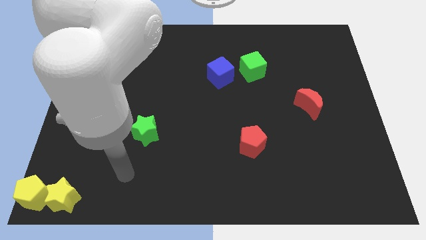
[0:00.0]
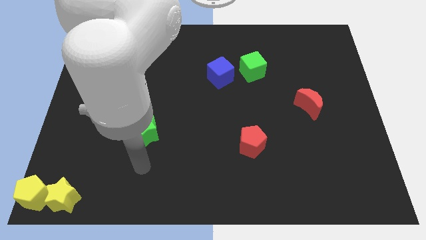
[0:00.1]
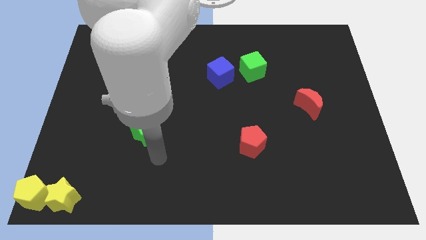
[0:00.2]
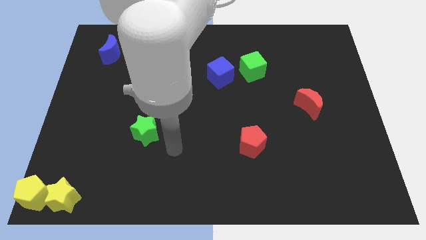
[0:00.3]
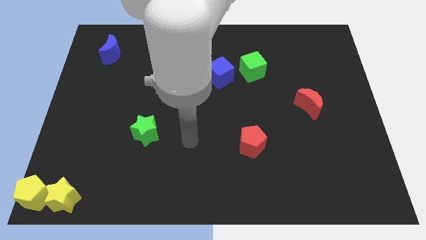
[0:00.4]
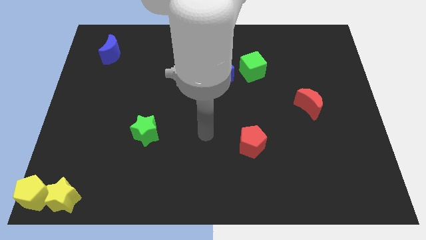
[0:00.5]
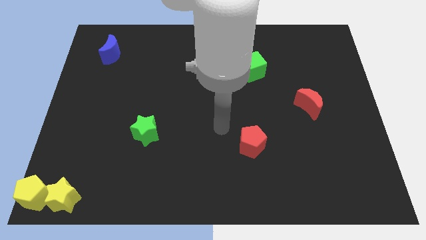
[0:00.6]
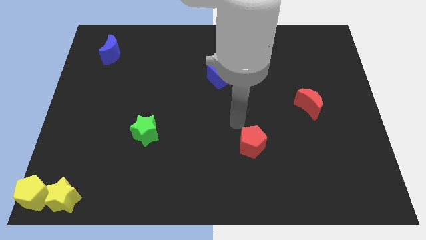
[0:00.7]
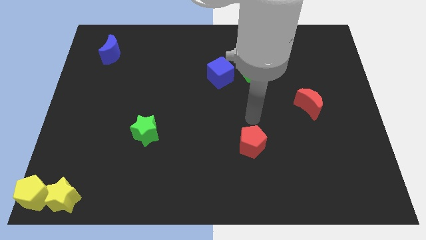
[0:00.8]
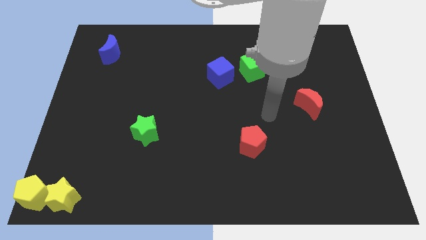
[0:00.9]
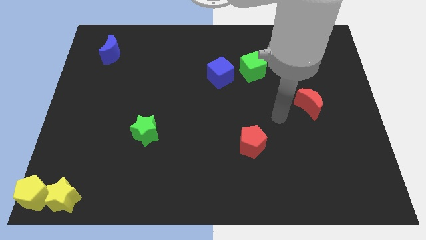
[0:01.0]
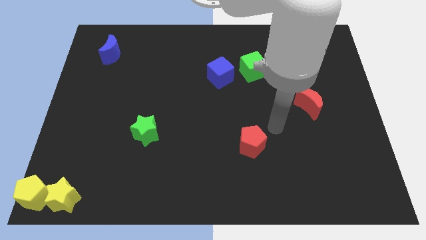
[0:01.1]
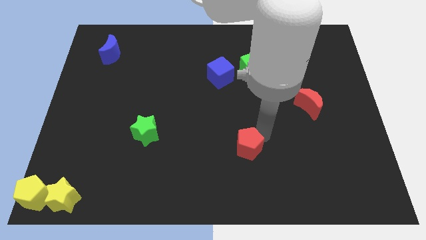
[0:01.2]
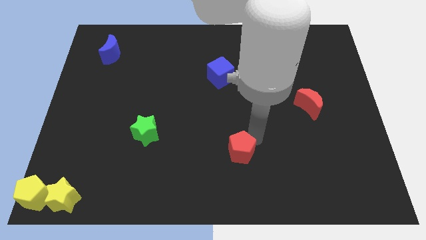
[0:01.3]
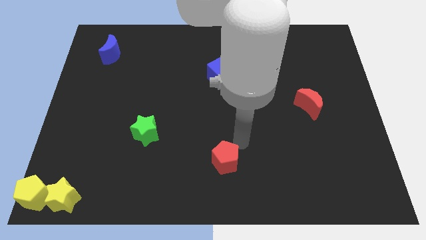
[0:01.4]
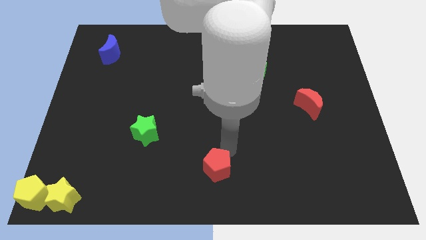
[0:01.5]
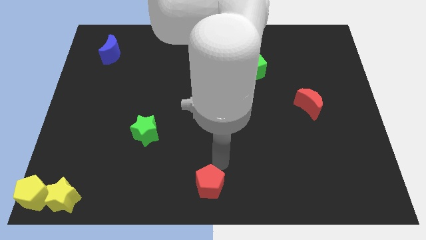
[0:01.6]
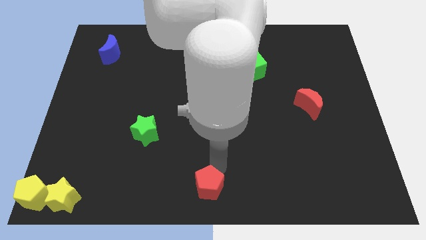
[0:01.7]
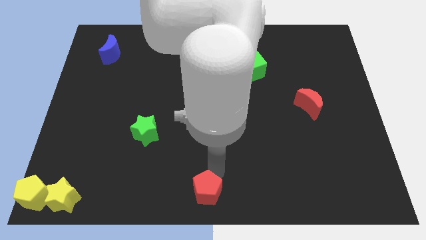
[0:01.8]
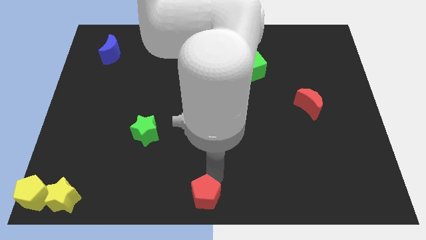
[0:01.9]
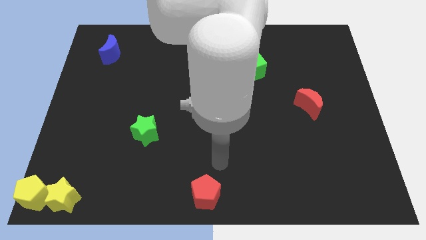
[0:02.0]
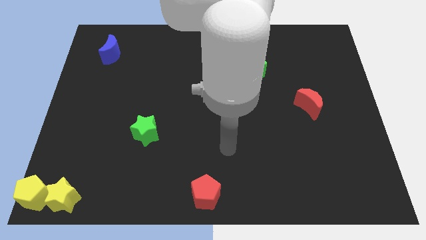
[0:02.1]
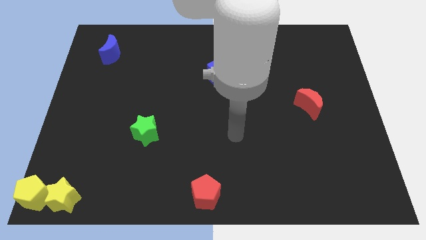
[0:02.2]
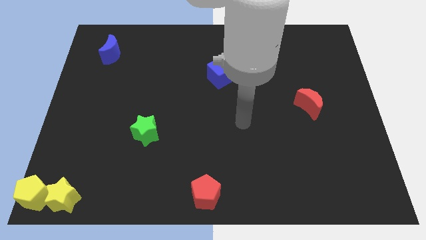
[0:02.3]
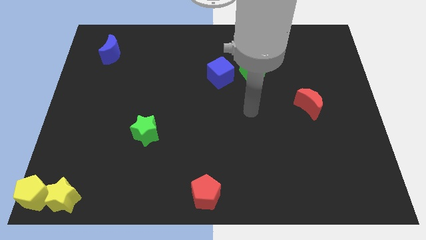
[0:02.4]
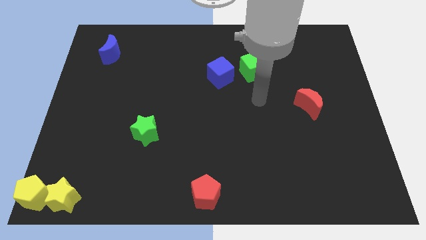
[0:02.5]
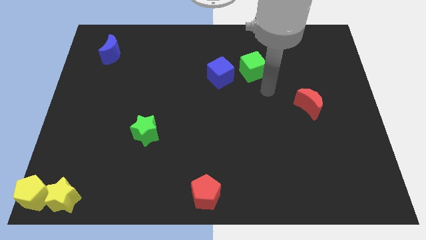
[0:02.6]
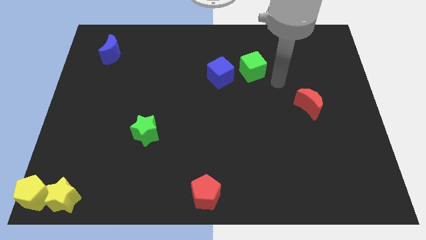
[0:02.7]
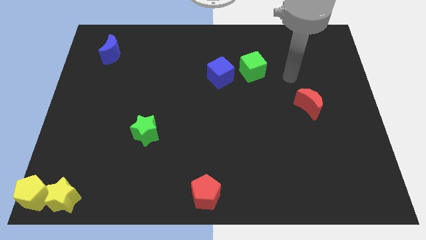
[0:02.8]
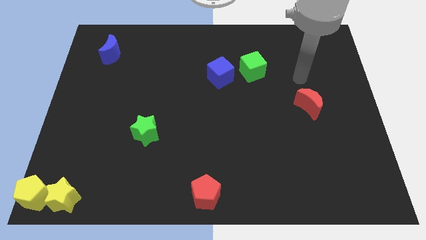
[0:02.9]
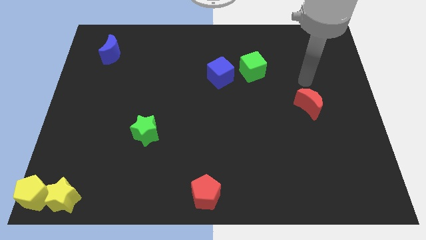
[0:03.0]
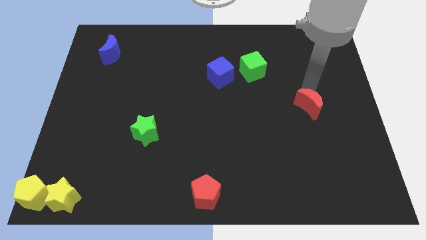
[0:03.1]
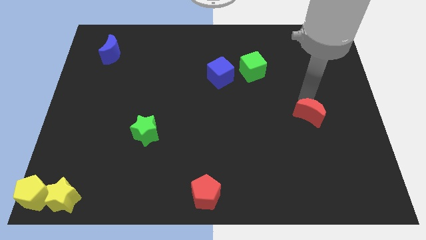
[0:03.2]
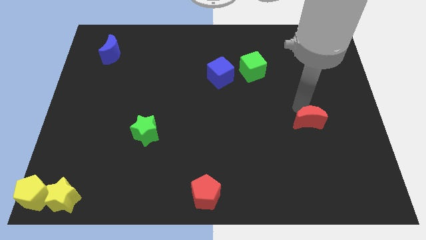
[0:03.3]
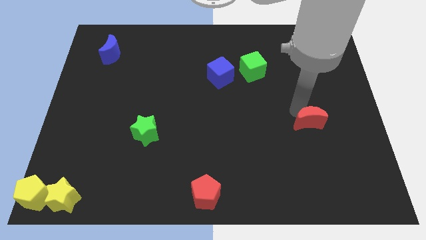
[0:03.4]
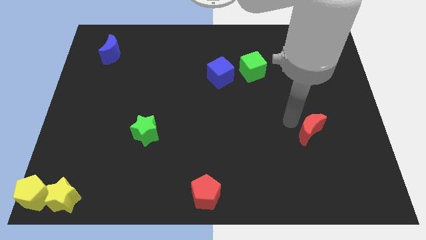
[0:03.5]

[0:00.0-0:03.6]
move the red pentagon towards the bottom center of the board

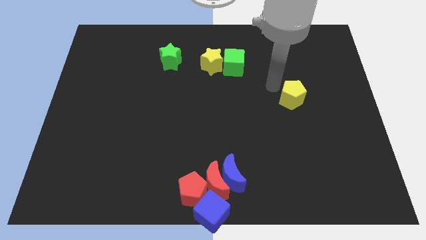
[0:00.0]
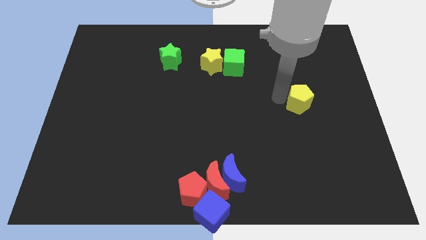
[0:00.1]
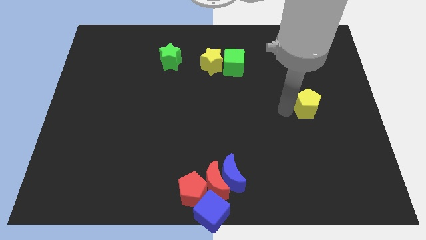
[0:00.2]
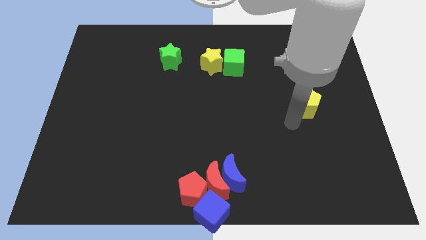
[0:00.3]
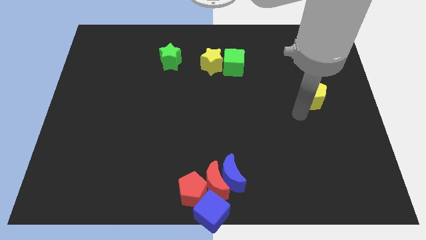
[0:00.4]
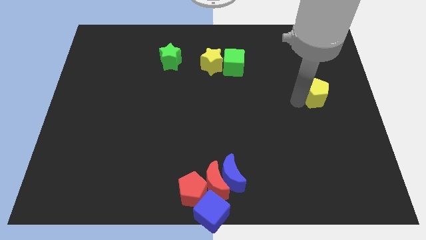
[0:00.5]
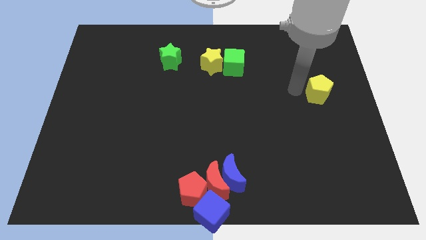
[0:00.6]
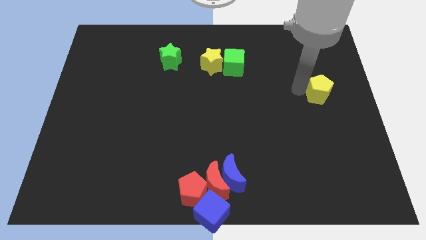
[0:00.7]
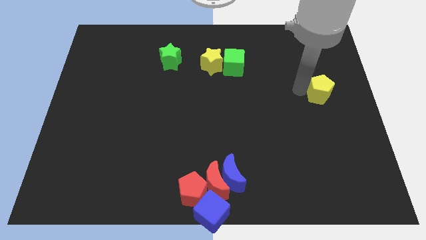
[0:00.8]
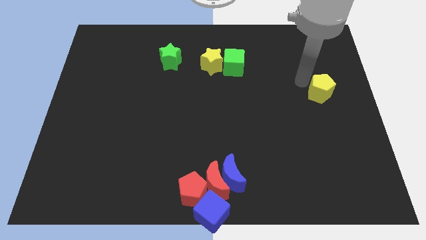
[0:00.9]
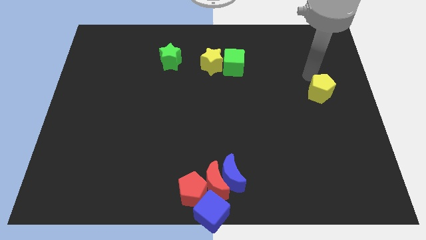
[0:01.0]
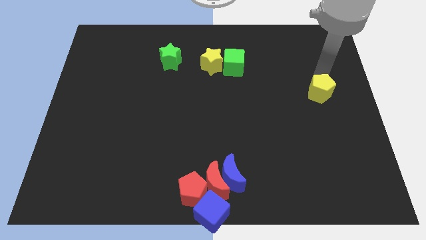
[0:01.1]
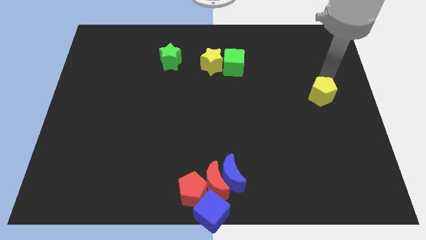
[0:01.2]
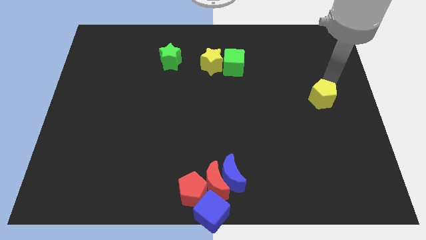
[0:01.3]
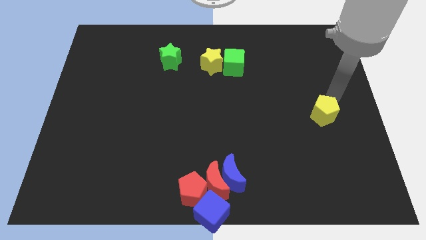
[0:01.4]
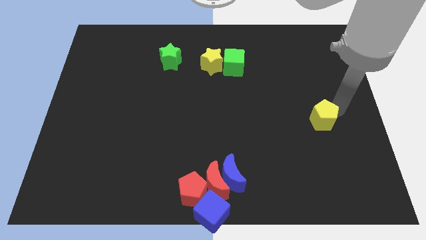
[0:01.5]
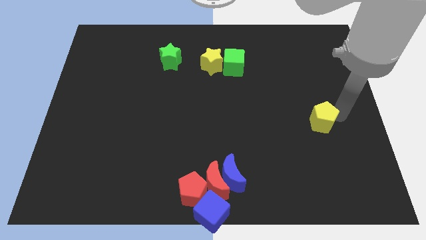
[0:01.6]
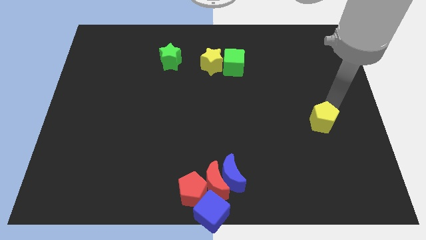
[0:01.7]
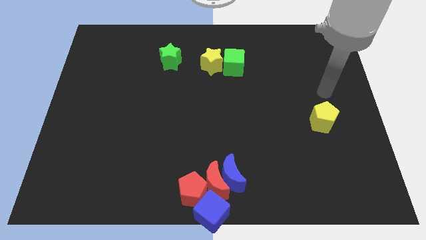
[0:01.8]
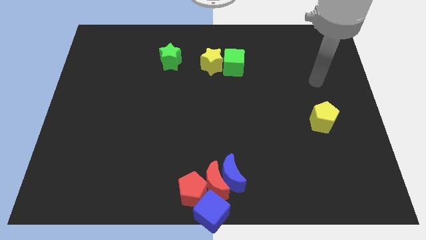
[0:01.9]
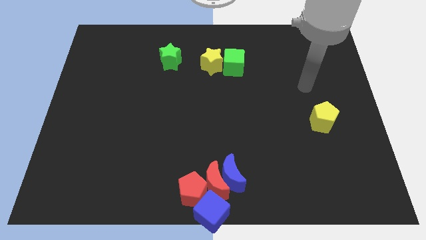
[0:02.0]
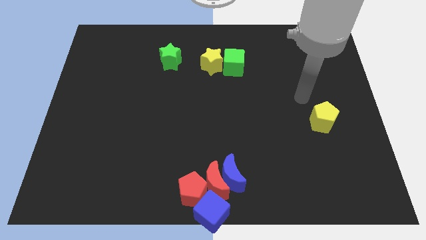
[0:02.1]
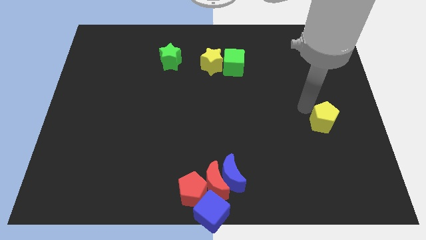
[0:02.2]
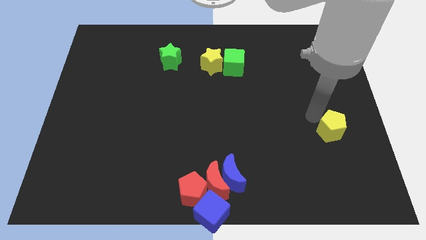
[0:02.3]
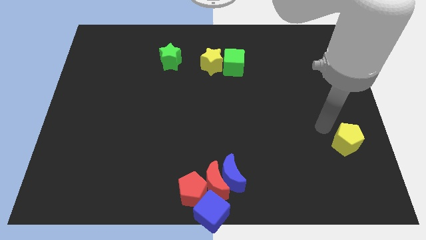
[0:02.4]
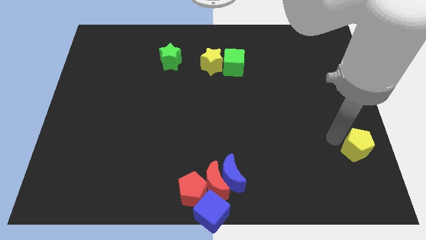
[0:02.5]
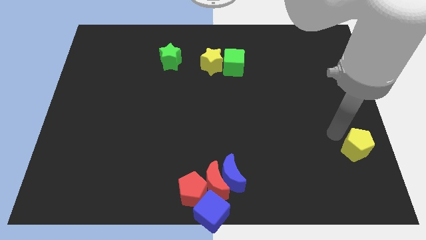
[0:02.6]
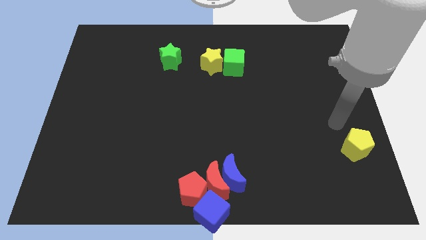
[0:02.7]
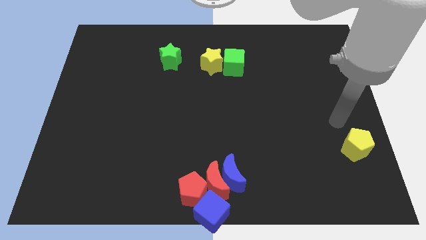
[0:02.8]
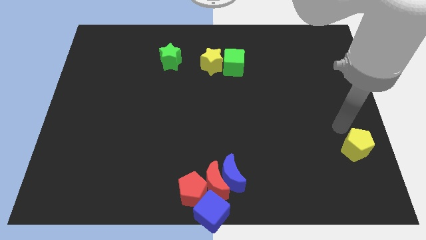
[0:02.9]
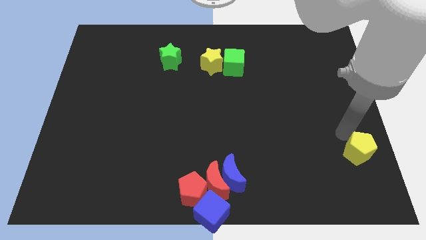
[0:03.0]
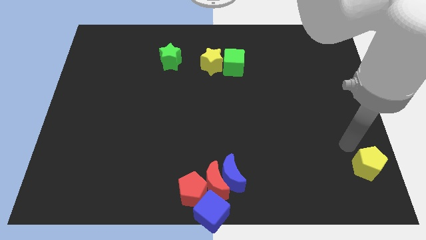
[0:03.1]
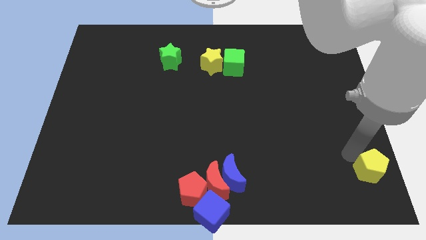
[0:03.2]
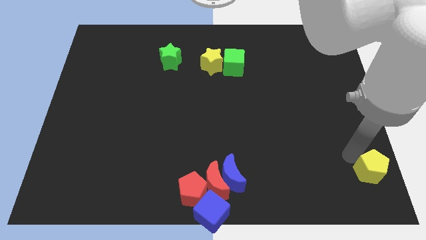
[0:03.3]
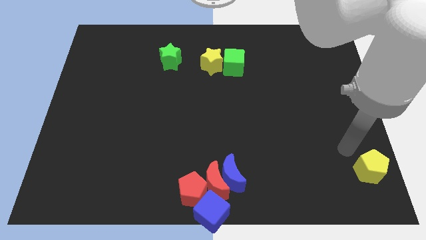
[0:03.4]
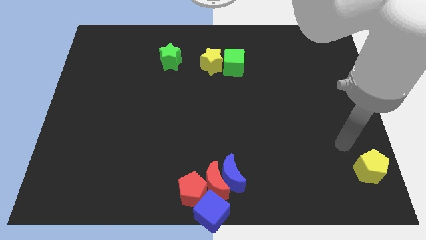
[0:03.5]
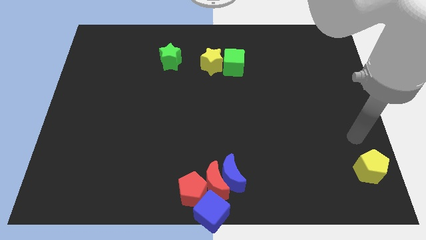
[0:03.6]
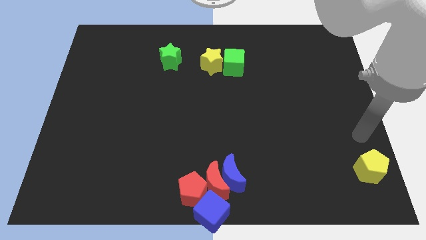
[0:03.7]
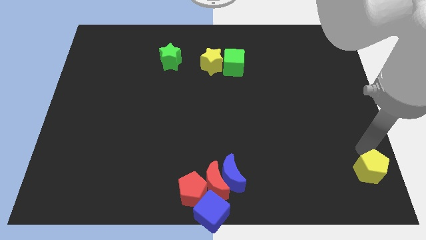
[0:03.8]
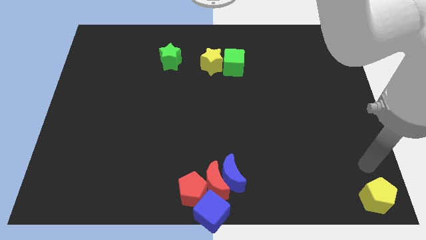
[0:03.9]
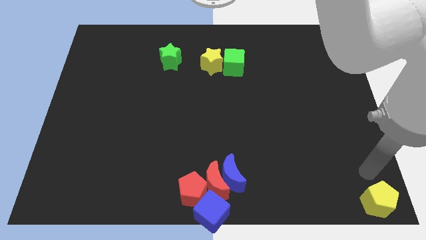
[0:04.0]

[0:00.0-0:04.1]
move the yellow pentagon to the bottom right side

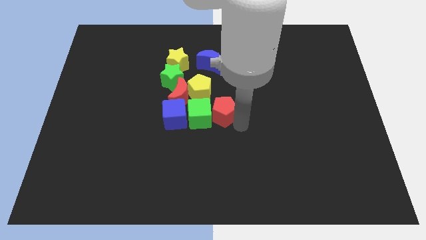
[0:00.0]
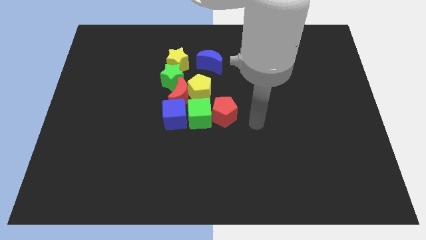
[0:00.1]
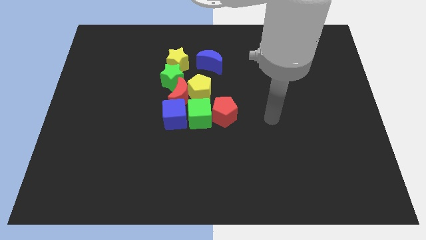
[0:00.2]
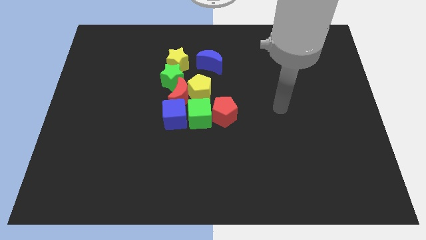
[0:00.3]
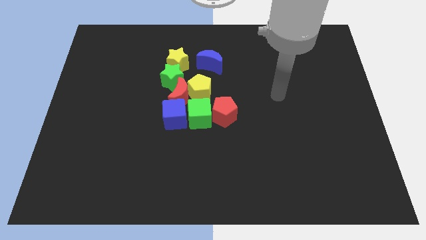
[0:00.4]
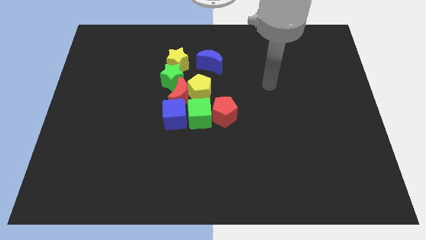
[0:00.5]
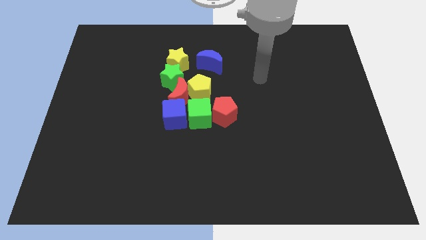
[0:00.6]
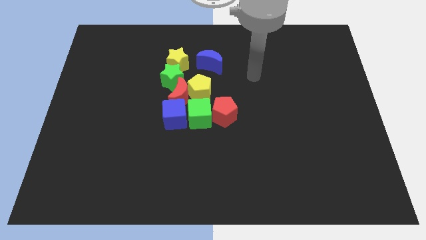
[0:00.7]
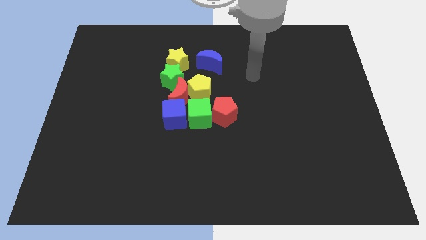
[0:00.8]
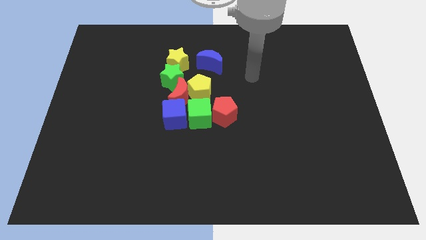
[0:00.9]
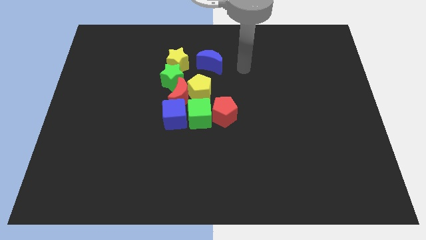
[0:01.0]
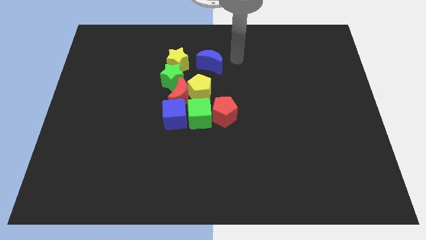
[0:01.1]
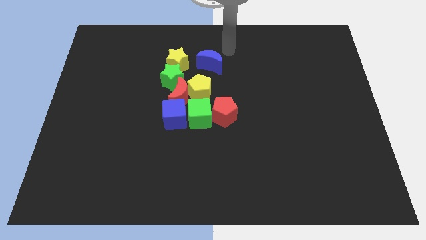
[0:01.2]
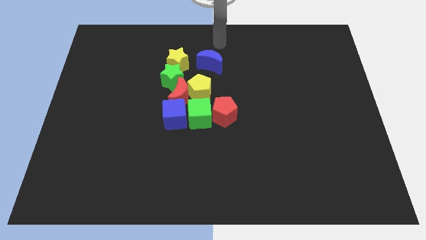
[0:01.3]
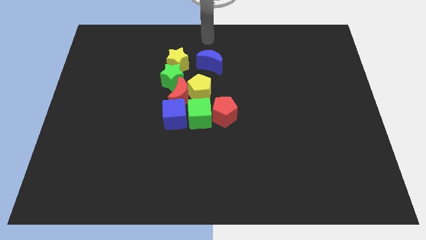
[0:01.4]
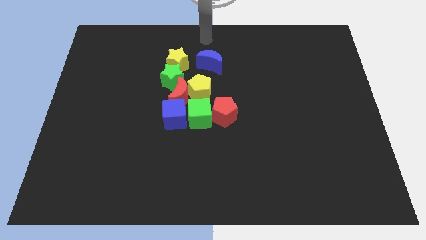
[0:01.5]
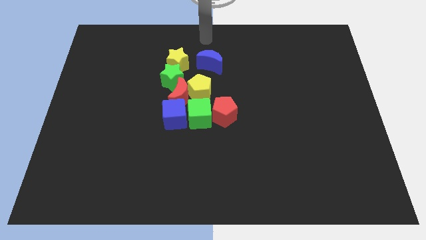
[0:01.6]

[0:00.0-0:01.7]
point your hand above the blue moon
